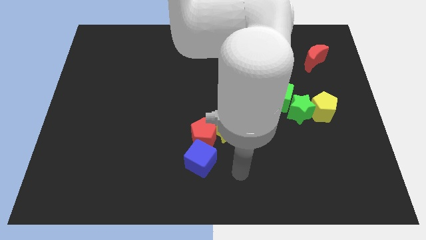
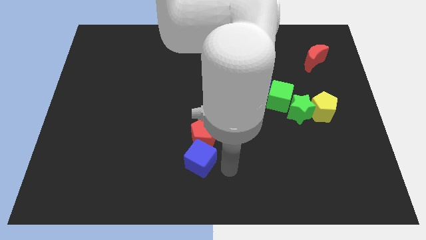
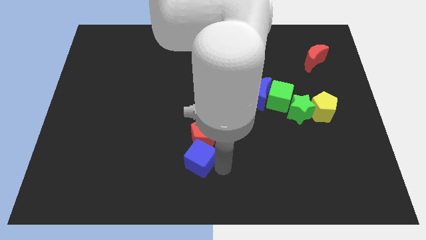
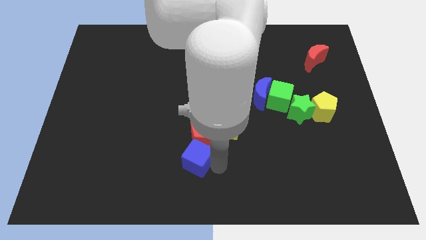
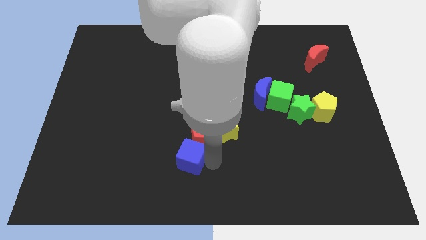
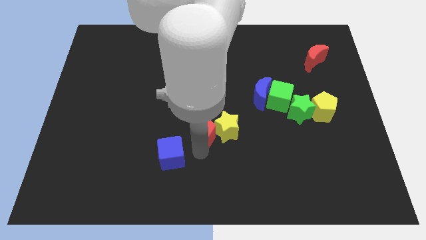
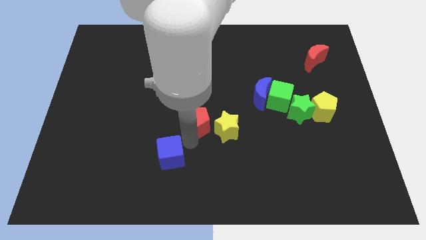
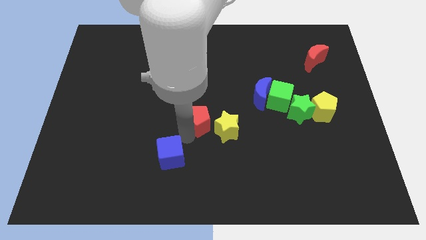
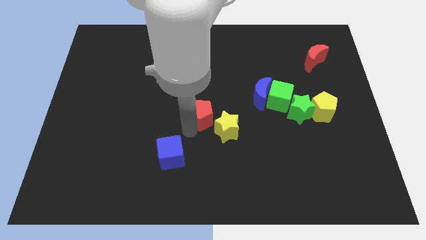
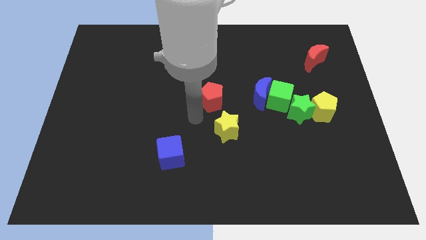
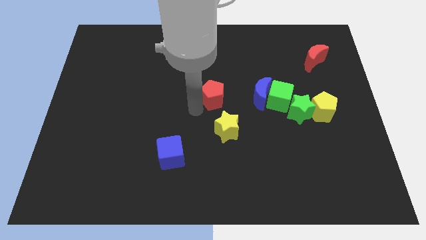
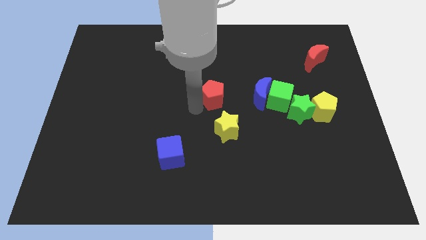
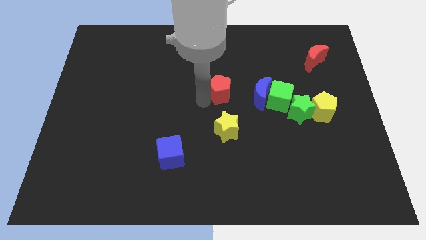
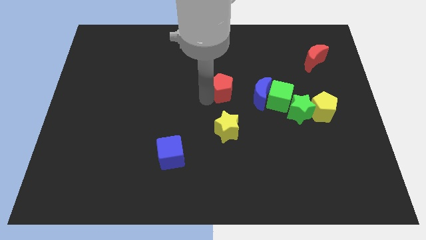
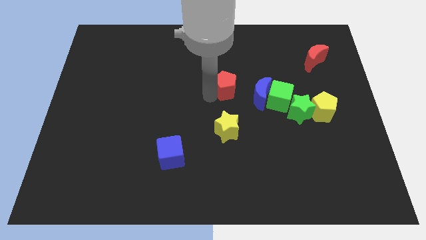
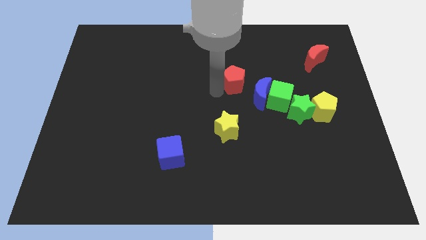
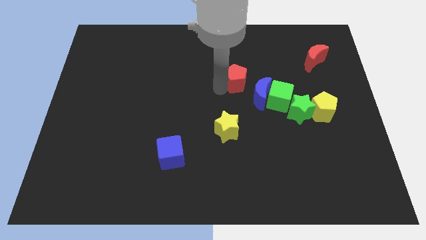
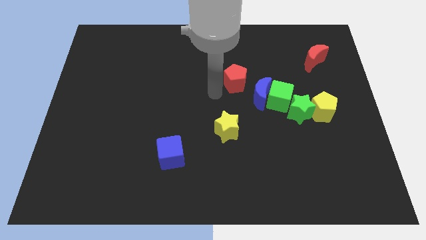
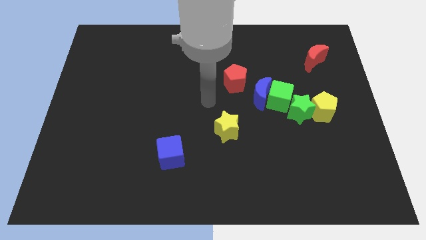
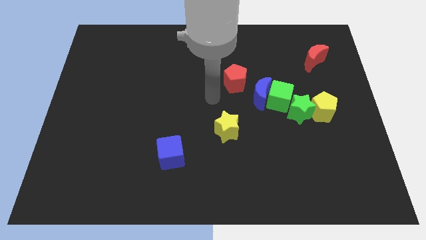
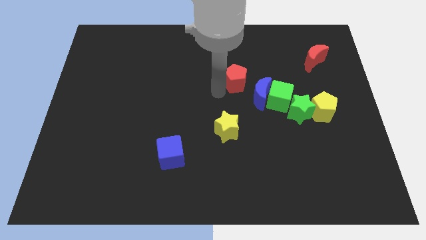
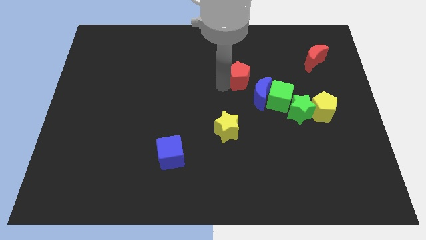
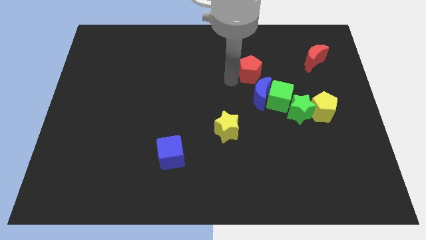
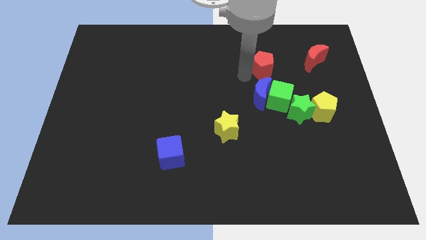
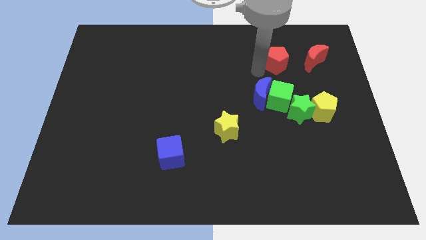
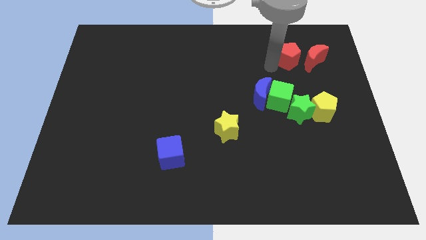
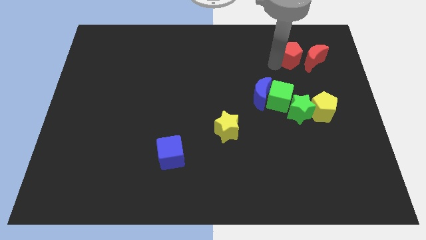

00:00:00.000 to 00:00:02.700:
place the red pentagon to the left of the red crescent

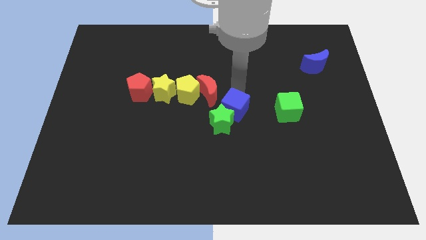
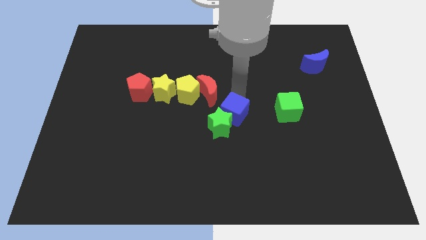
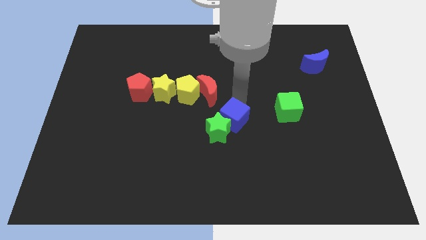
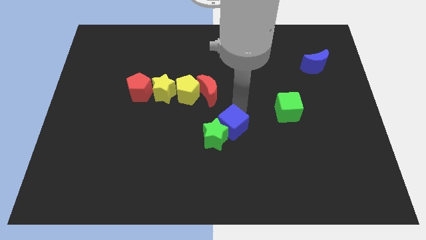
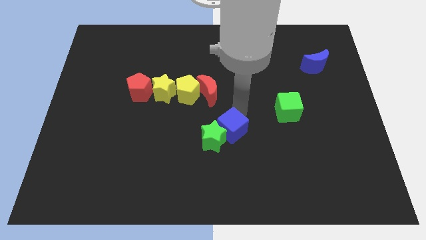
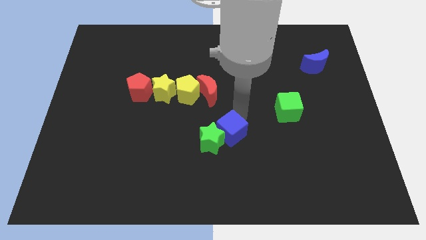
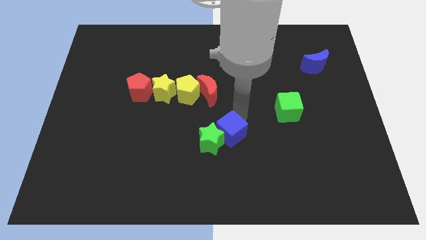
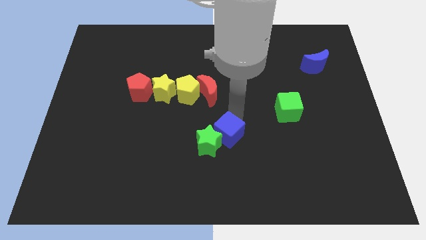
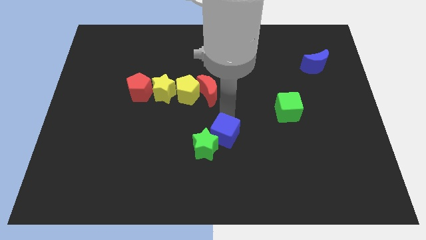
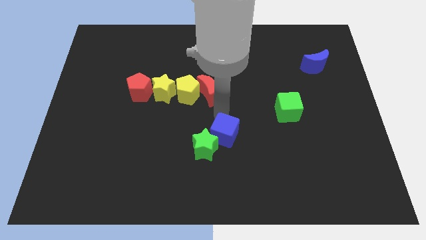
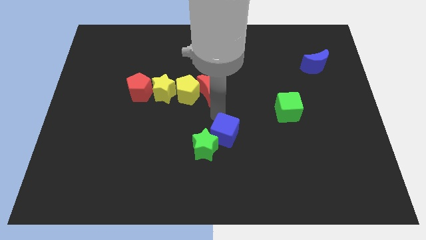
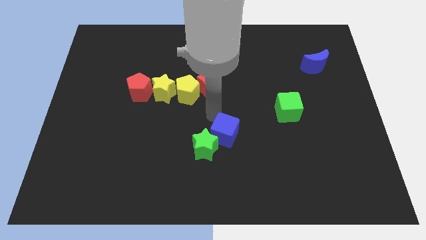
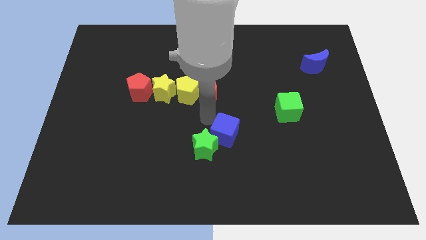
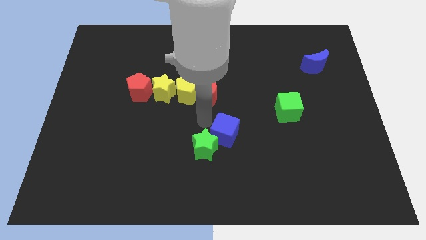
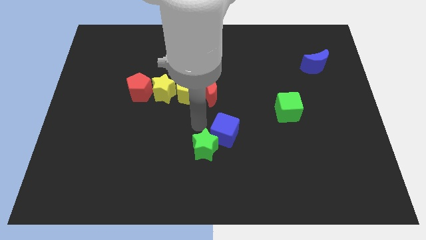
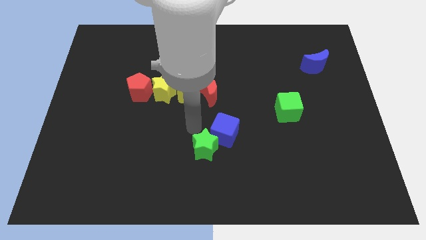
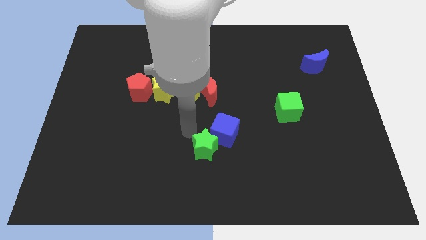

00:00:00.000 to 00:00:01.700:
push the blue cube along with the green star slightly to the bottom side of the board

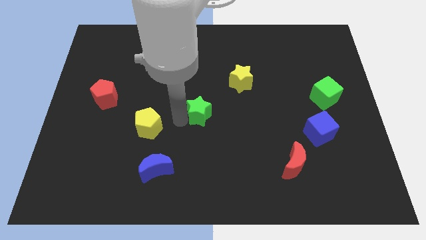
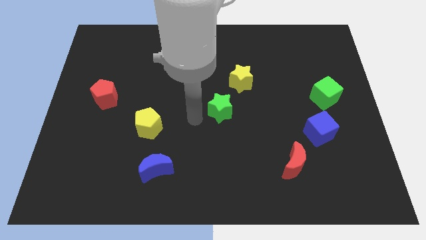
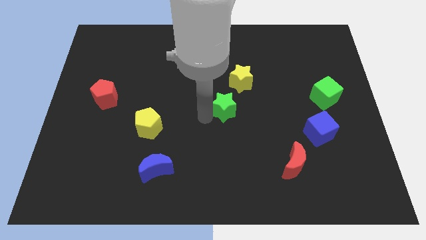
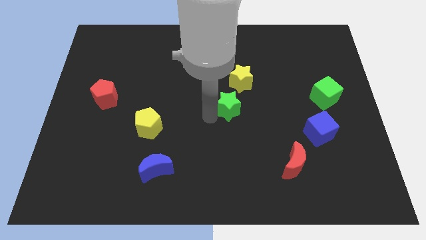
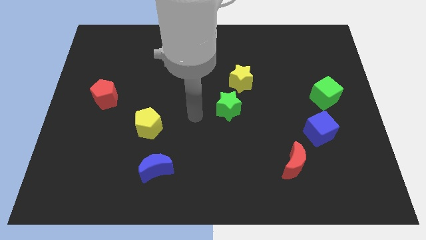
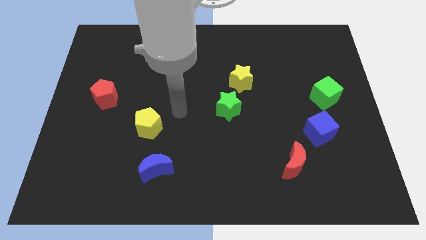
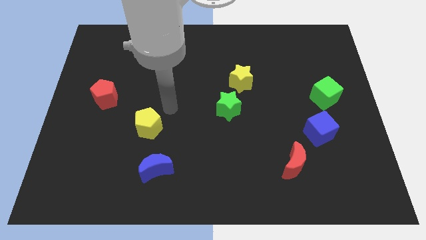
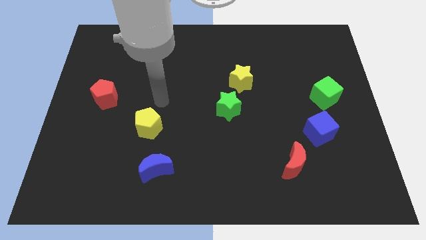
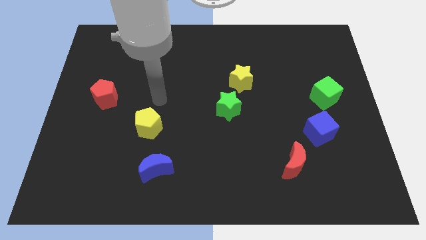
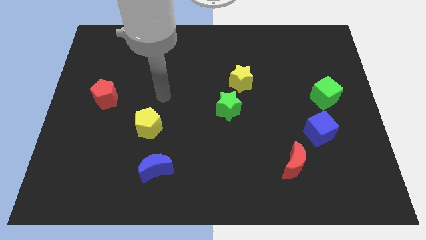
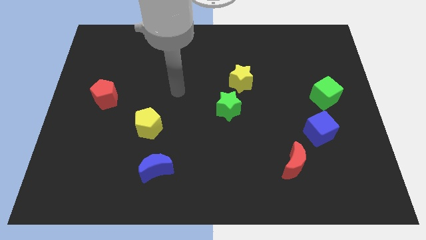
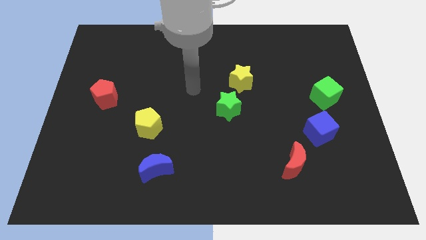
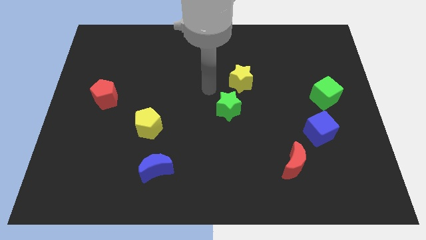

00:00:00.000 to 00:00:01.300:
move the green star towards the bottom side of the yellow star

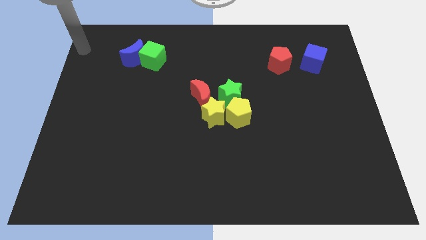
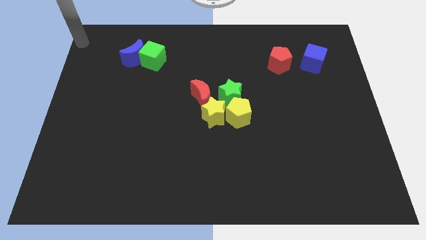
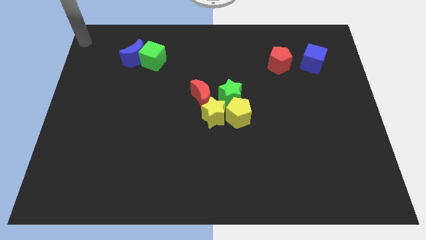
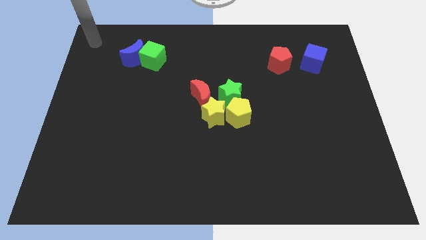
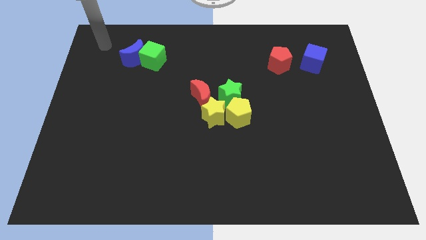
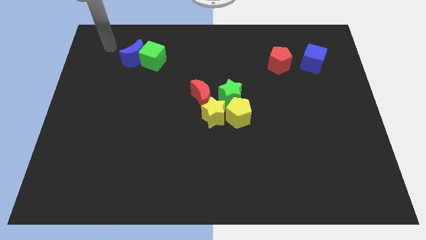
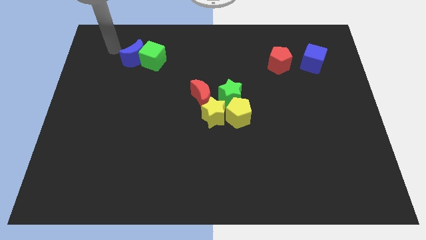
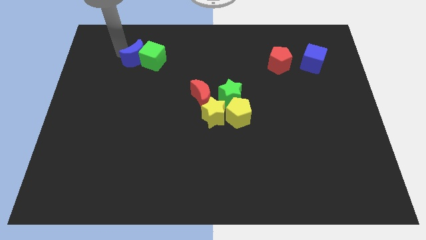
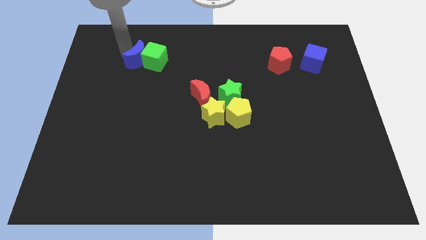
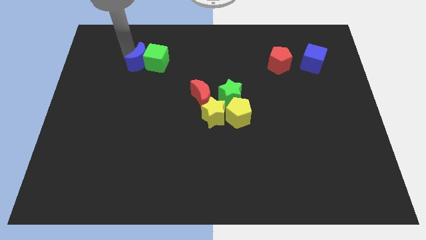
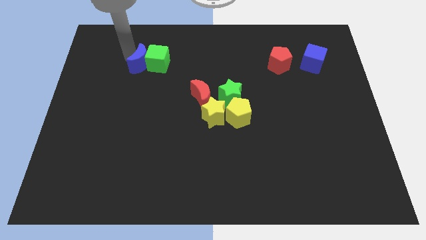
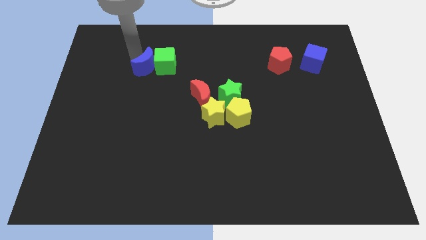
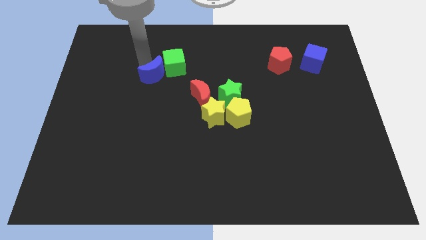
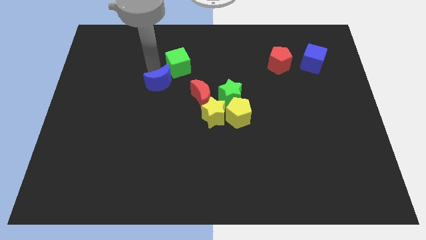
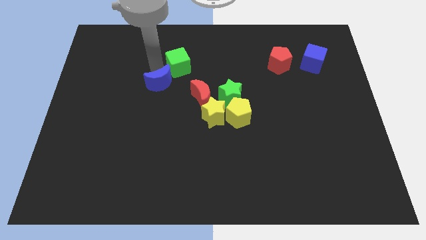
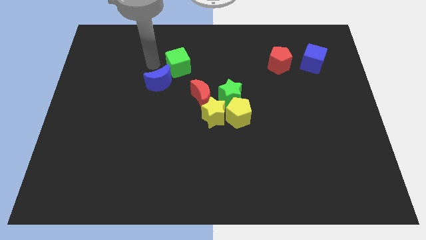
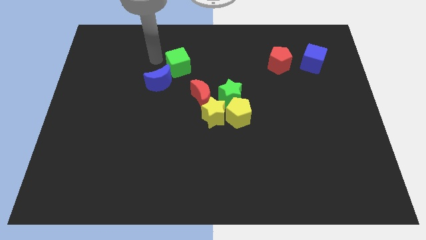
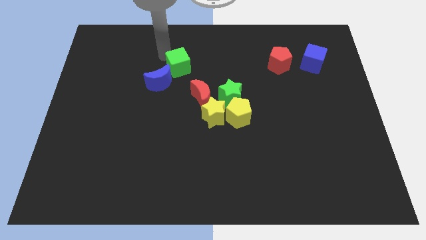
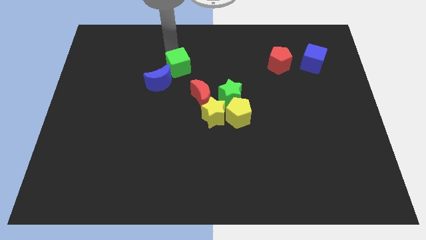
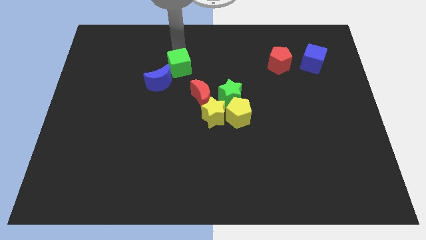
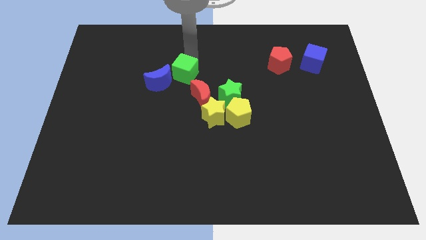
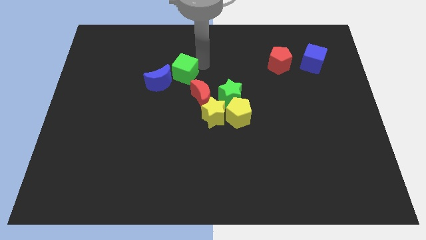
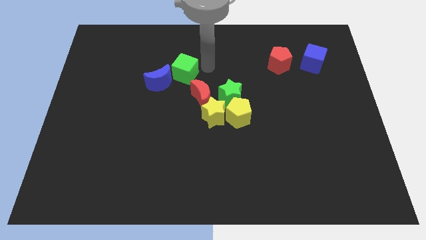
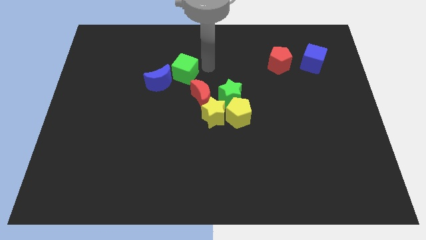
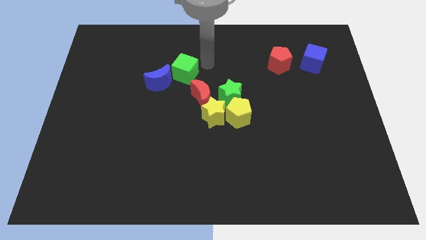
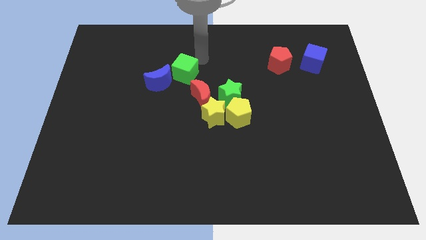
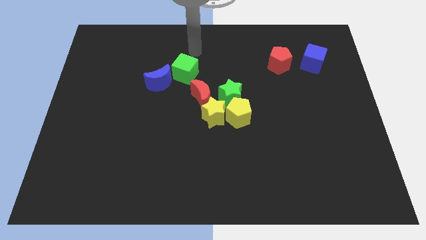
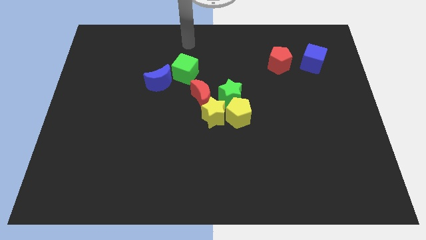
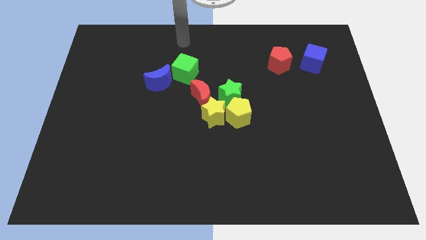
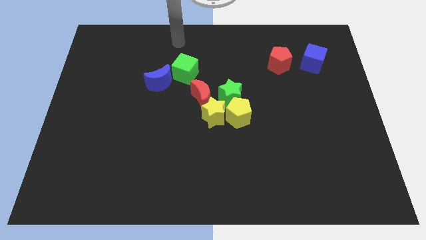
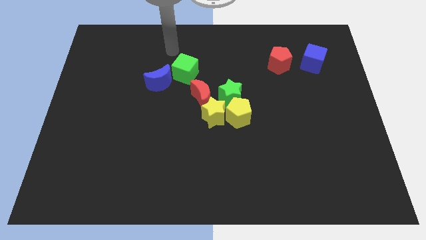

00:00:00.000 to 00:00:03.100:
move the green cube and blue crescent towards the red moon
